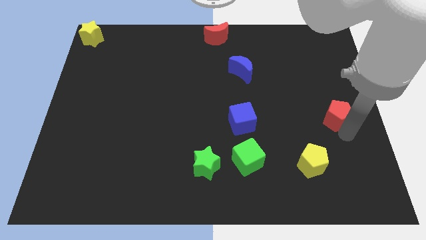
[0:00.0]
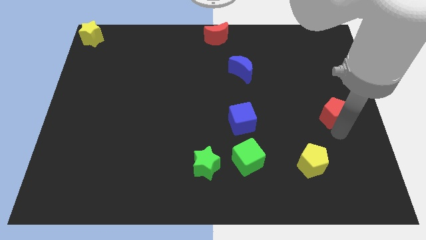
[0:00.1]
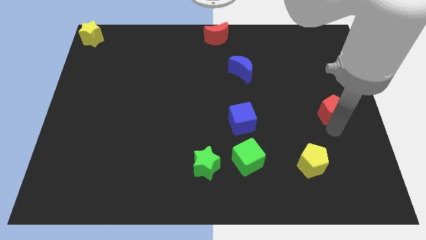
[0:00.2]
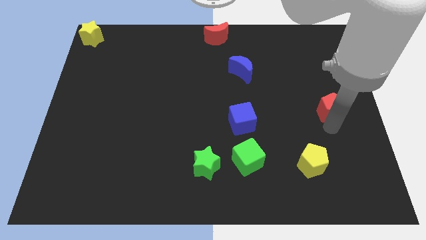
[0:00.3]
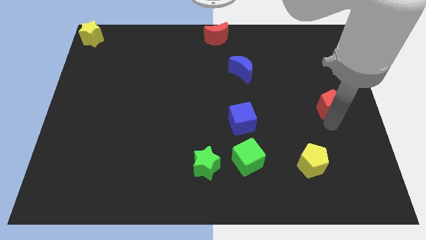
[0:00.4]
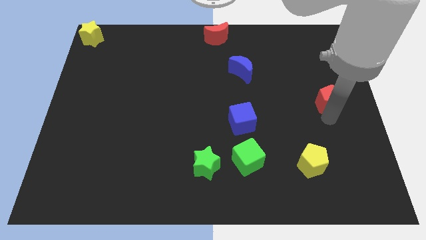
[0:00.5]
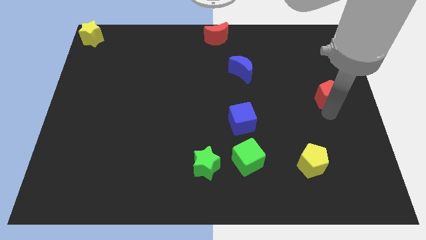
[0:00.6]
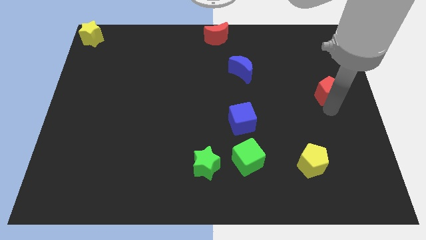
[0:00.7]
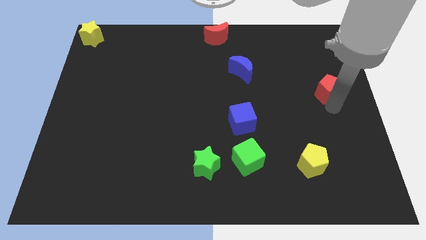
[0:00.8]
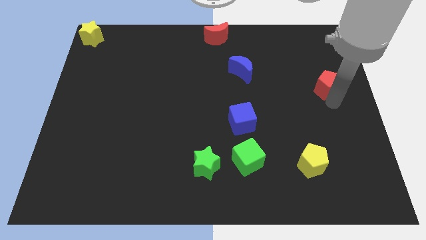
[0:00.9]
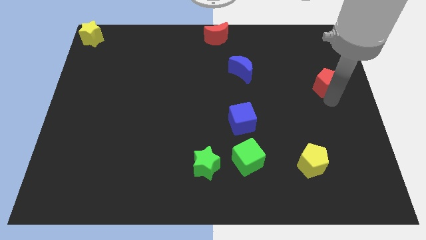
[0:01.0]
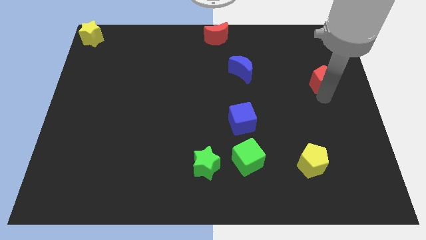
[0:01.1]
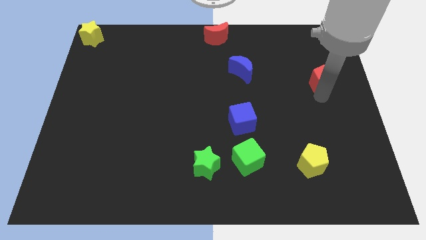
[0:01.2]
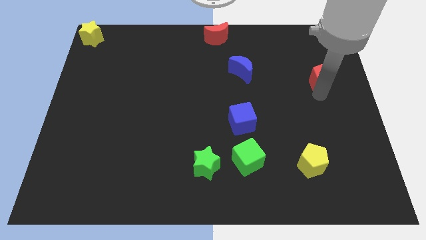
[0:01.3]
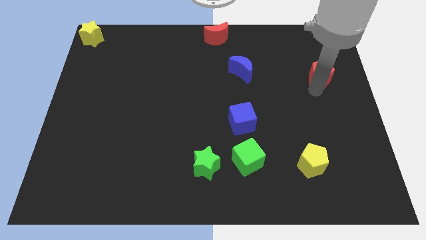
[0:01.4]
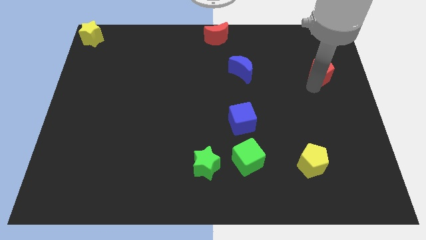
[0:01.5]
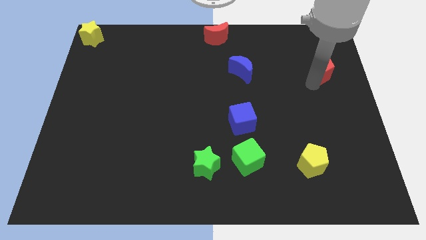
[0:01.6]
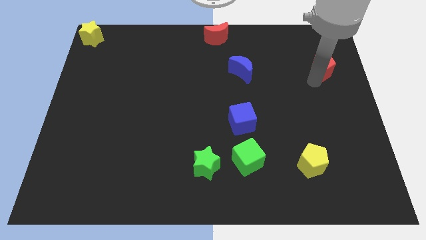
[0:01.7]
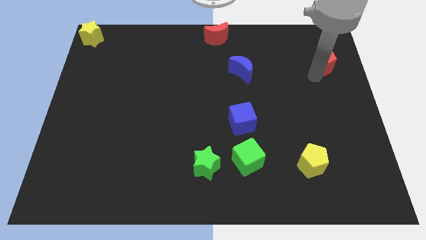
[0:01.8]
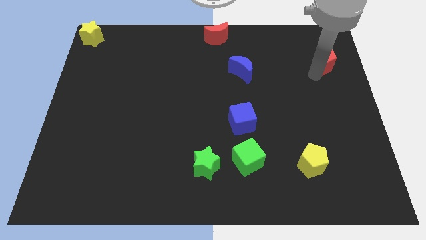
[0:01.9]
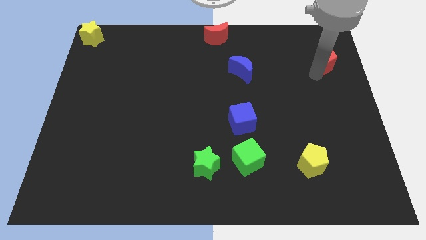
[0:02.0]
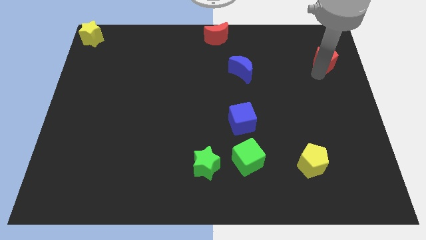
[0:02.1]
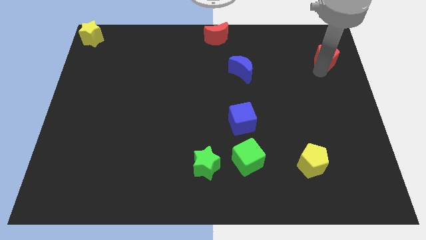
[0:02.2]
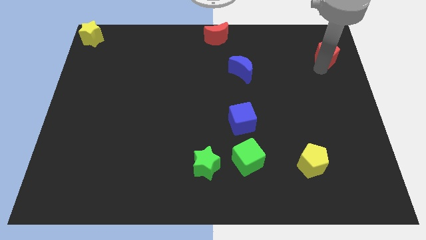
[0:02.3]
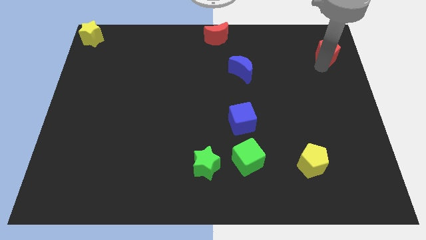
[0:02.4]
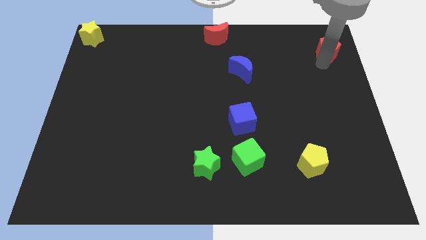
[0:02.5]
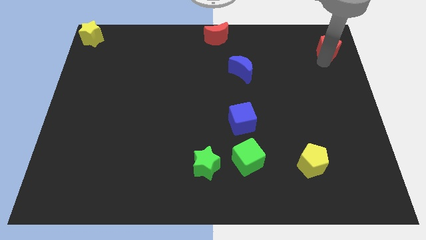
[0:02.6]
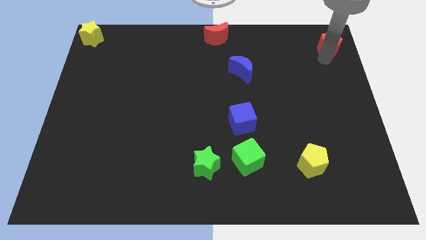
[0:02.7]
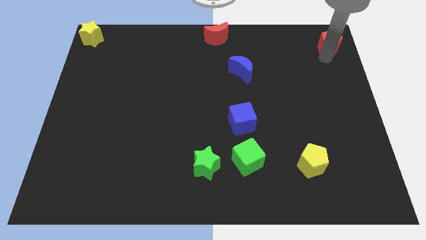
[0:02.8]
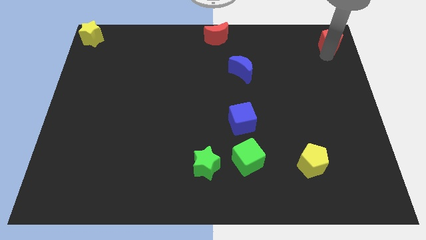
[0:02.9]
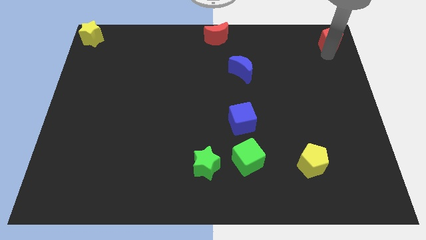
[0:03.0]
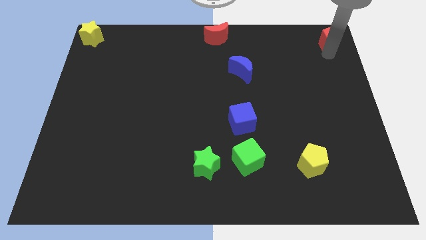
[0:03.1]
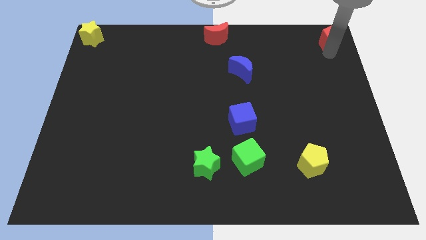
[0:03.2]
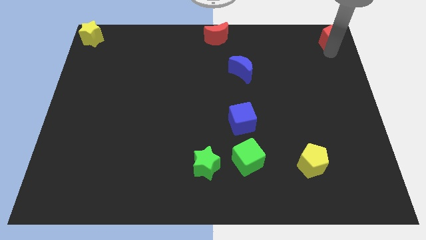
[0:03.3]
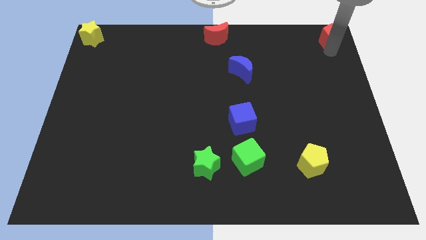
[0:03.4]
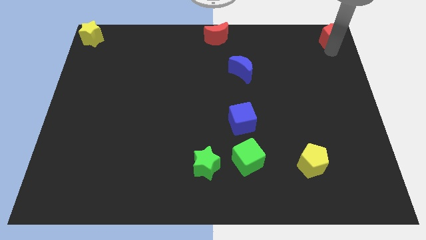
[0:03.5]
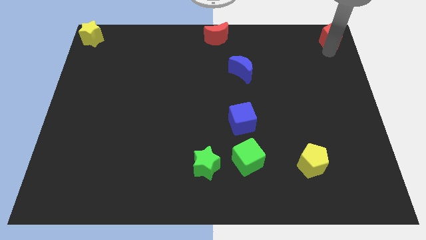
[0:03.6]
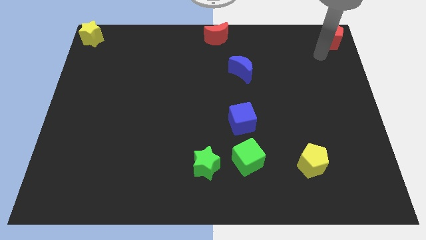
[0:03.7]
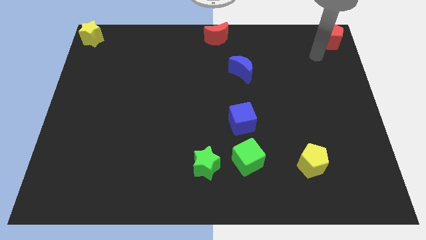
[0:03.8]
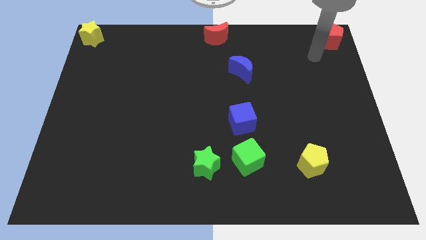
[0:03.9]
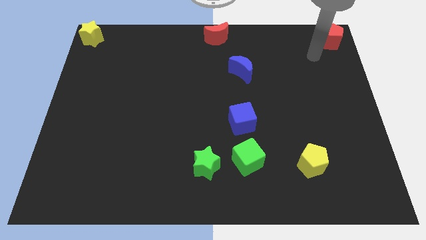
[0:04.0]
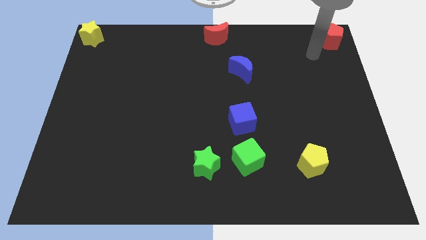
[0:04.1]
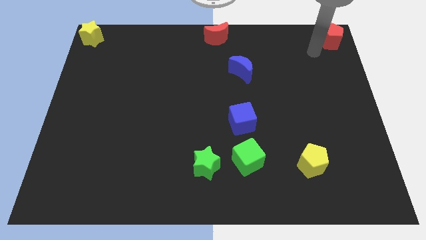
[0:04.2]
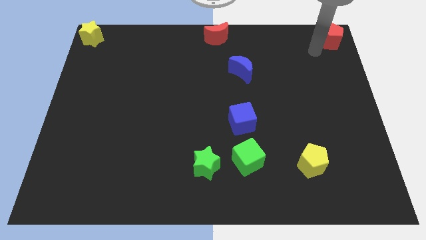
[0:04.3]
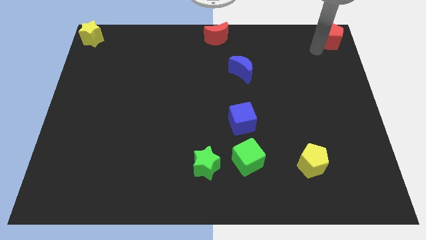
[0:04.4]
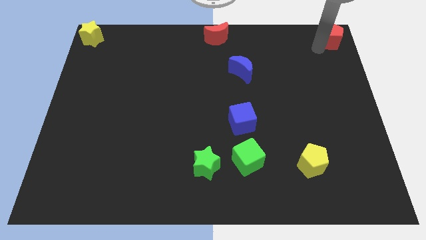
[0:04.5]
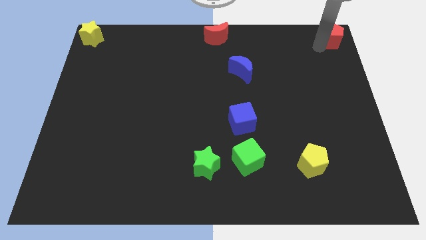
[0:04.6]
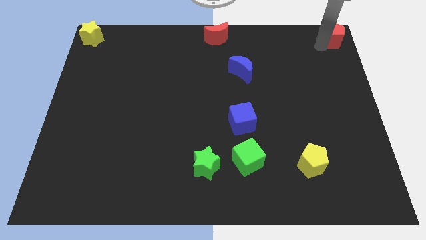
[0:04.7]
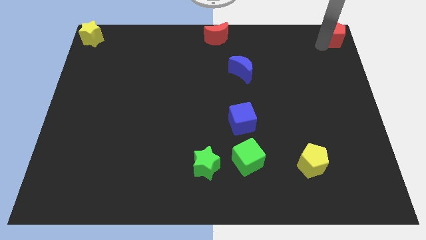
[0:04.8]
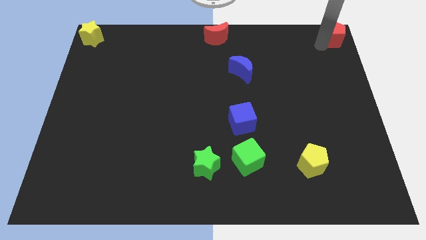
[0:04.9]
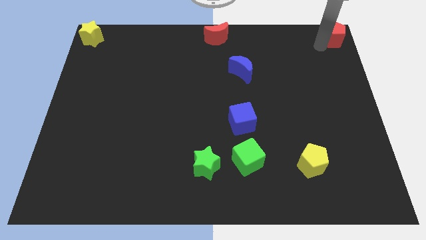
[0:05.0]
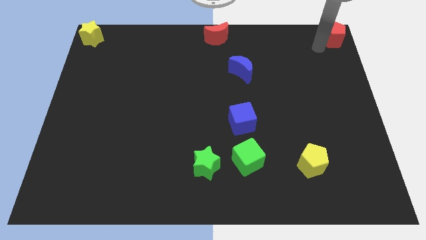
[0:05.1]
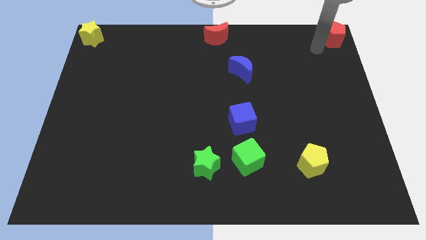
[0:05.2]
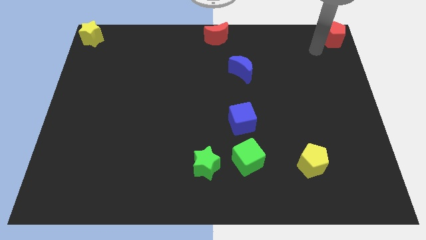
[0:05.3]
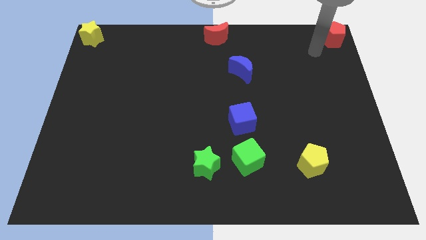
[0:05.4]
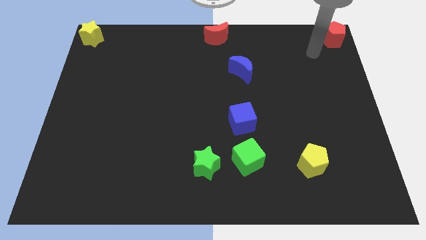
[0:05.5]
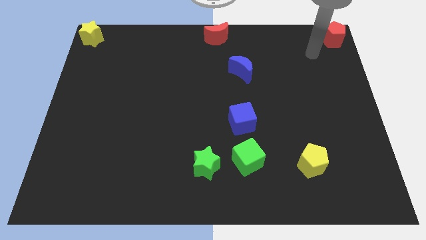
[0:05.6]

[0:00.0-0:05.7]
move the red pentagon to the top right of the board

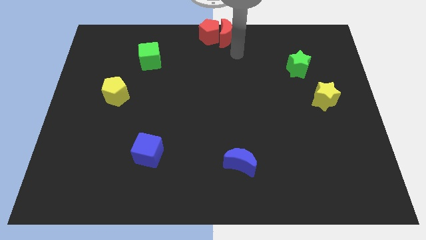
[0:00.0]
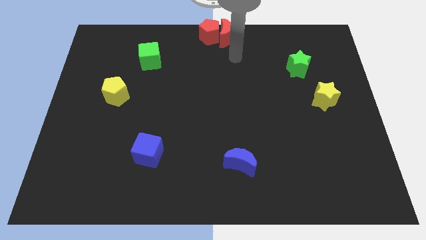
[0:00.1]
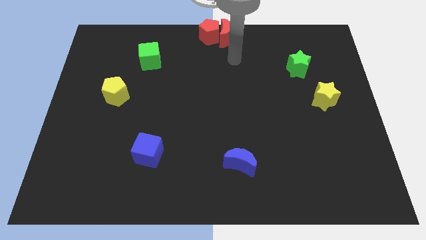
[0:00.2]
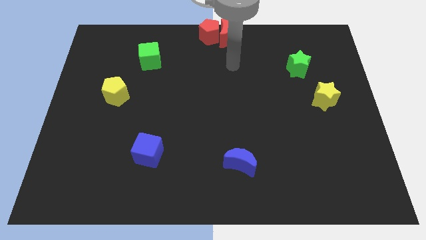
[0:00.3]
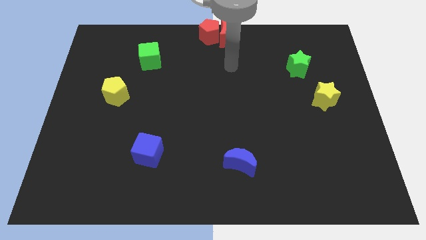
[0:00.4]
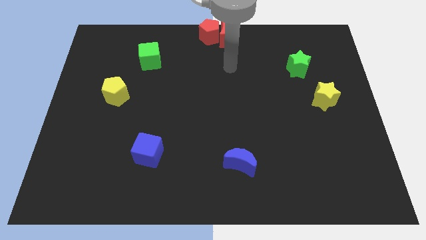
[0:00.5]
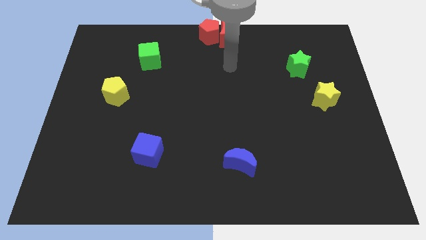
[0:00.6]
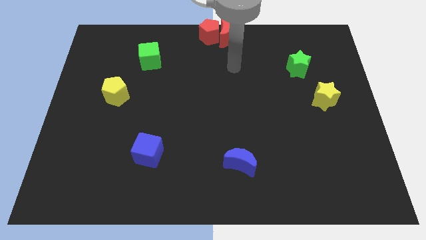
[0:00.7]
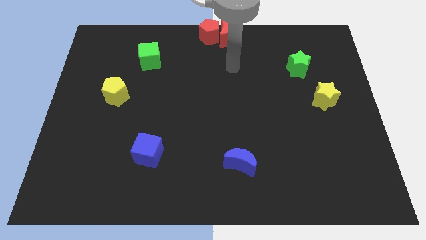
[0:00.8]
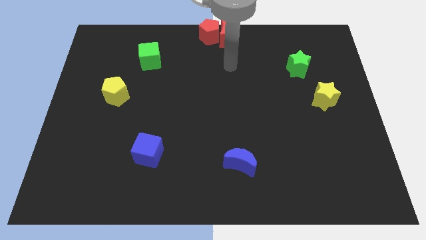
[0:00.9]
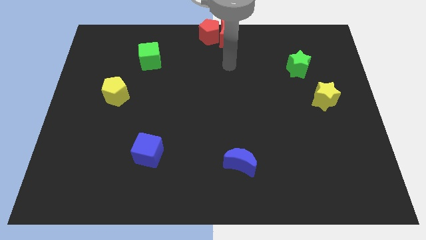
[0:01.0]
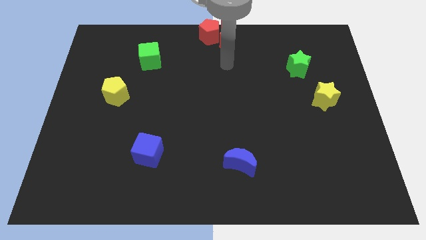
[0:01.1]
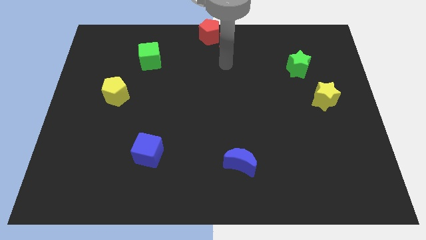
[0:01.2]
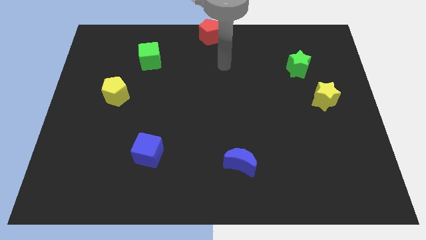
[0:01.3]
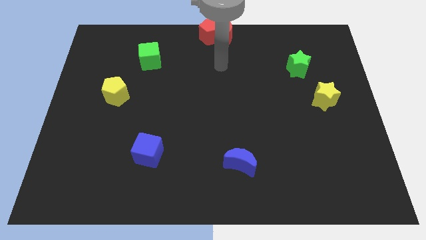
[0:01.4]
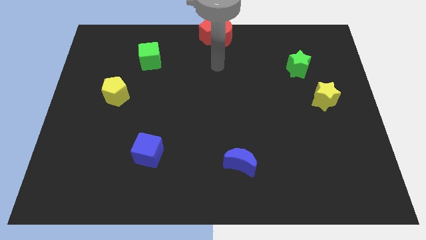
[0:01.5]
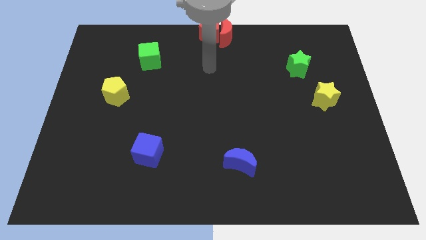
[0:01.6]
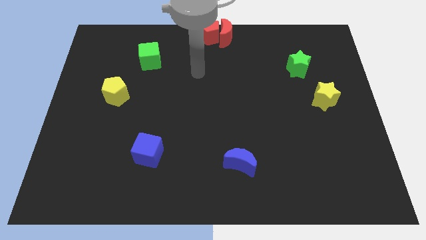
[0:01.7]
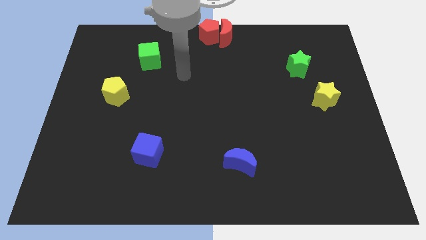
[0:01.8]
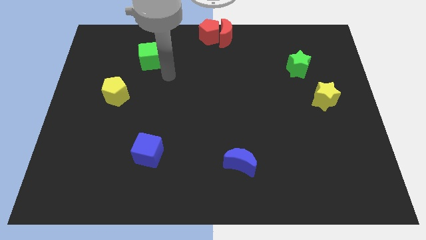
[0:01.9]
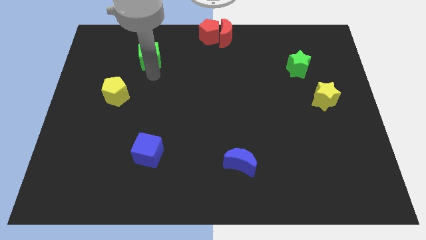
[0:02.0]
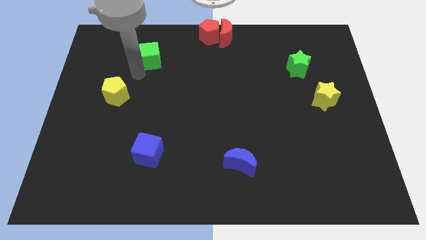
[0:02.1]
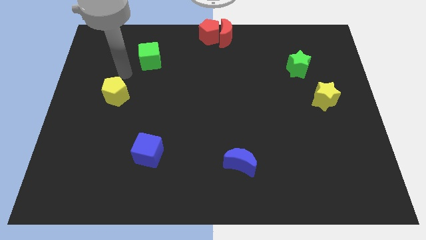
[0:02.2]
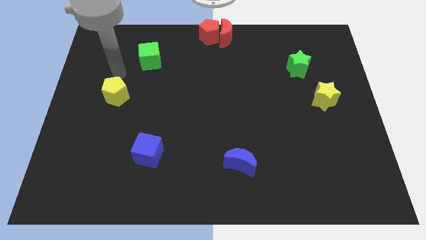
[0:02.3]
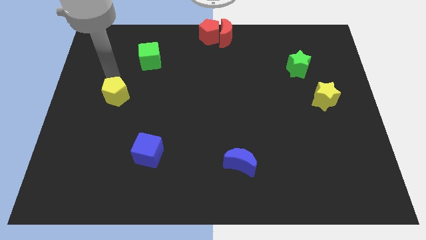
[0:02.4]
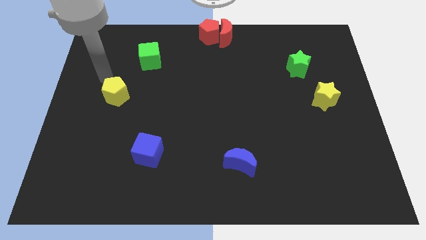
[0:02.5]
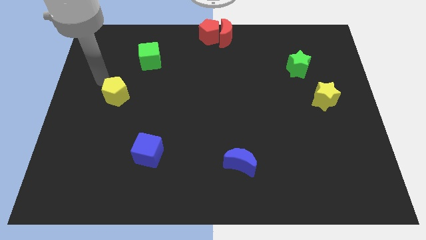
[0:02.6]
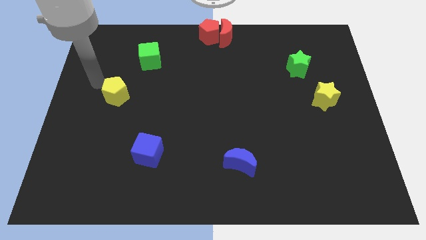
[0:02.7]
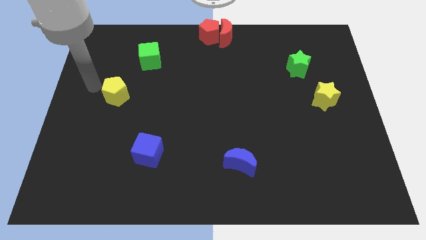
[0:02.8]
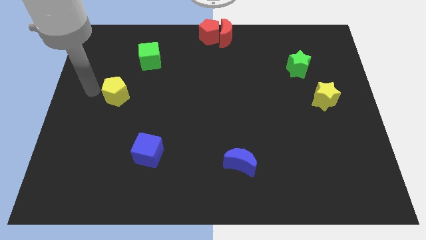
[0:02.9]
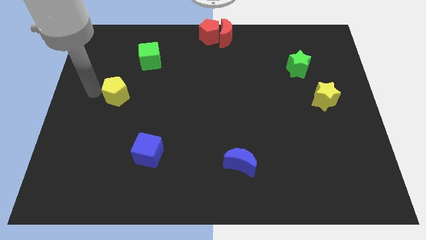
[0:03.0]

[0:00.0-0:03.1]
point the arm to the left of the yellow pentagon

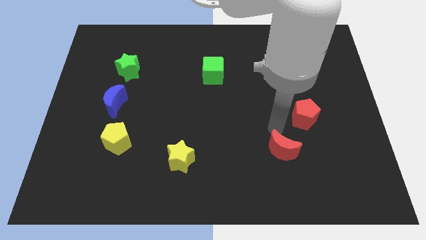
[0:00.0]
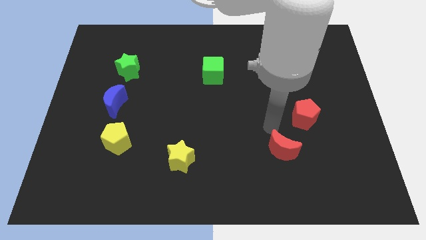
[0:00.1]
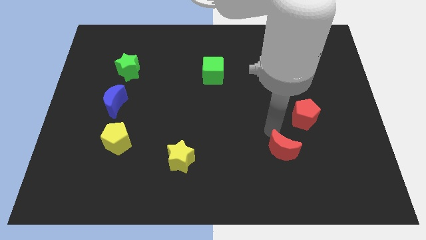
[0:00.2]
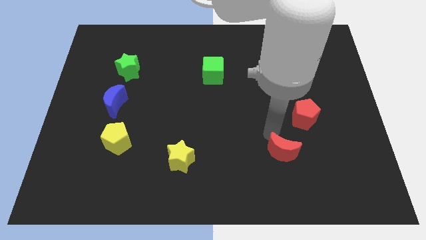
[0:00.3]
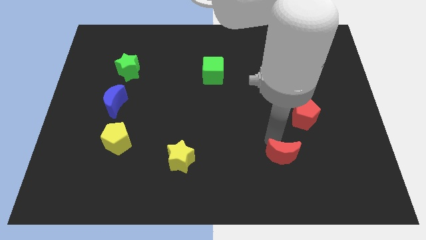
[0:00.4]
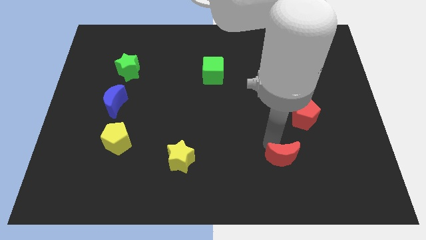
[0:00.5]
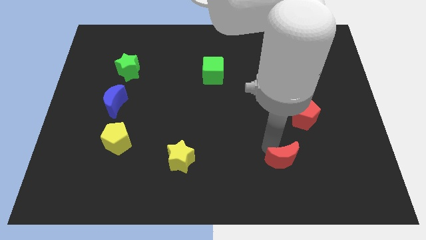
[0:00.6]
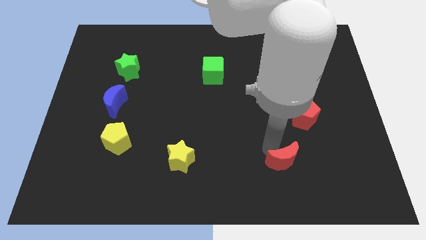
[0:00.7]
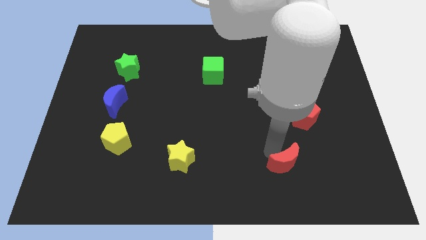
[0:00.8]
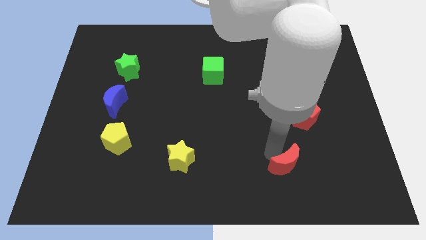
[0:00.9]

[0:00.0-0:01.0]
slightly push the red crescent to the bottom of the board
